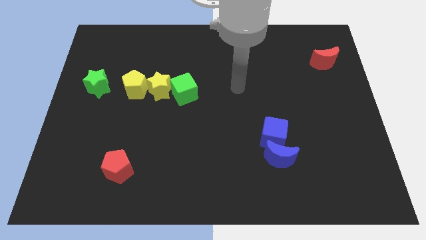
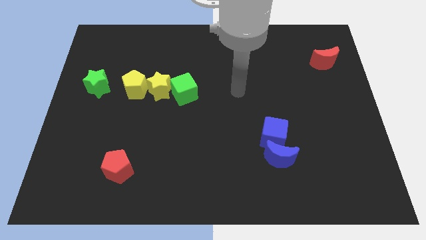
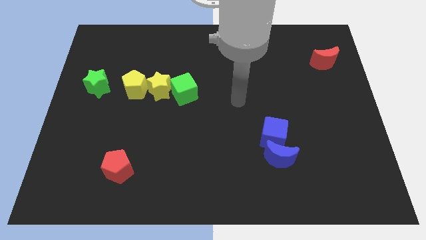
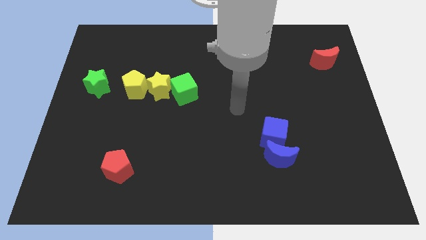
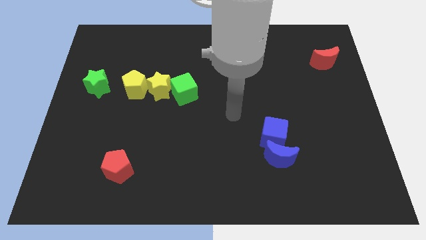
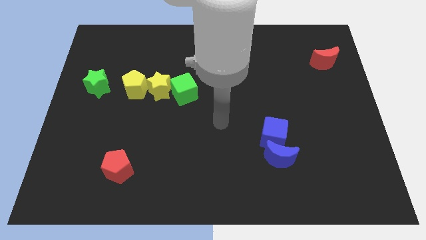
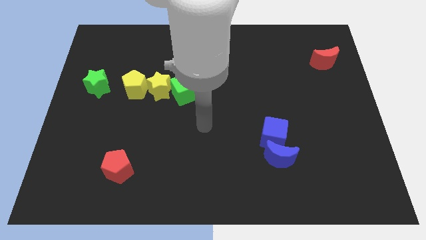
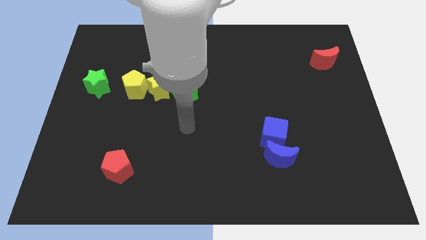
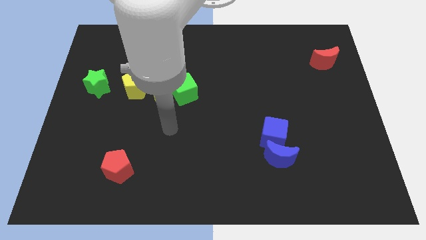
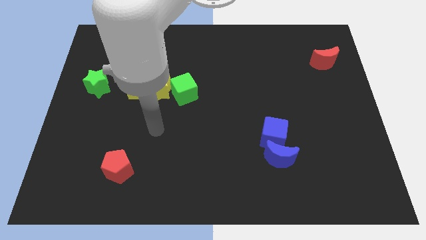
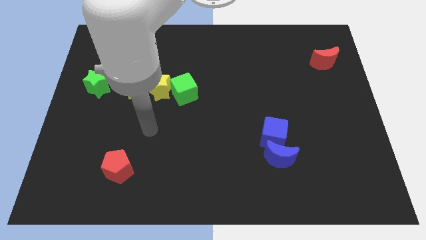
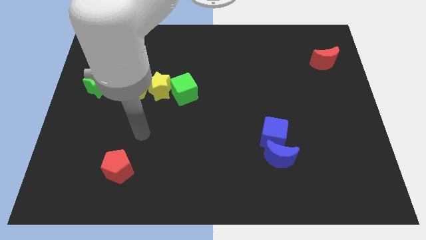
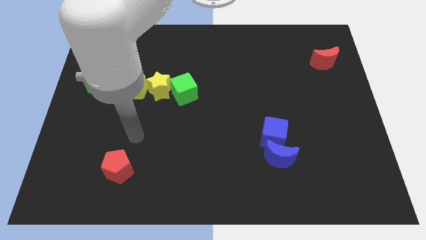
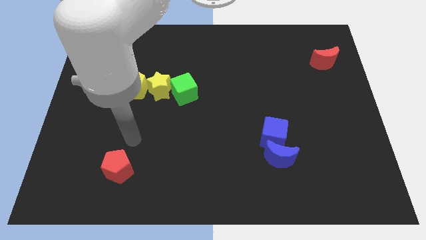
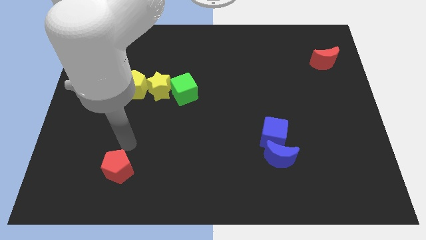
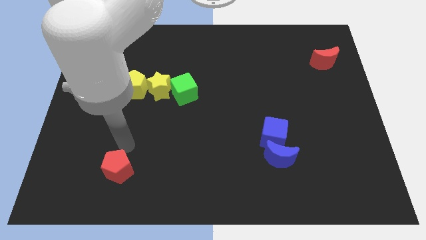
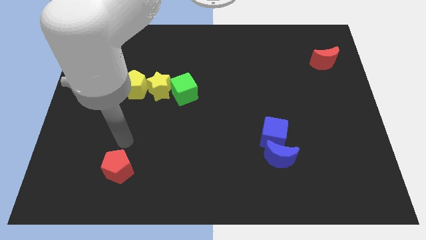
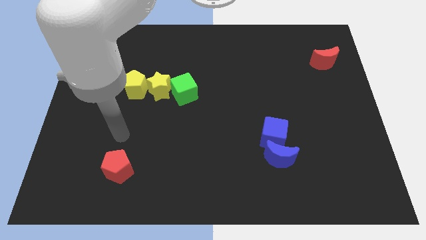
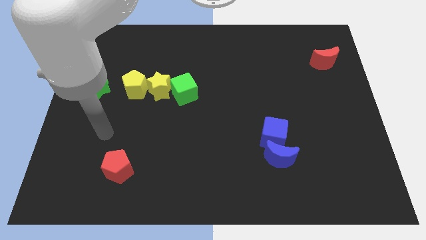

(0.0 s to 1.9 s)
move your arm towards the left center of the board

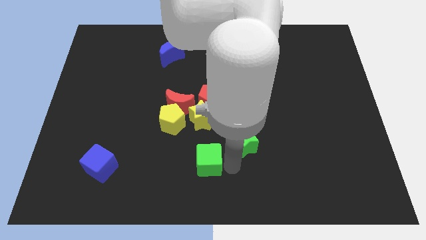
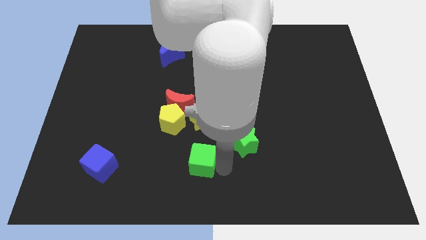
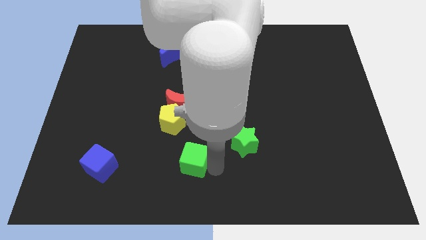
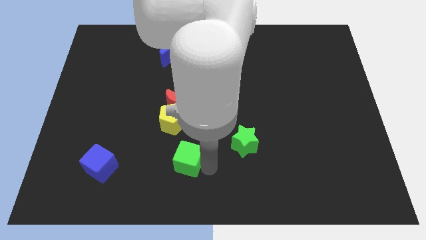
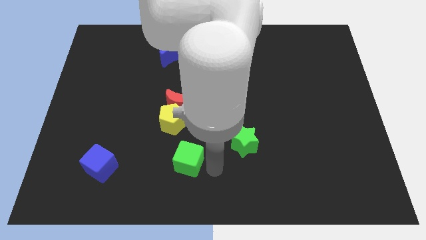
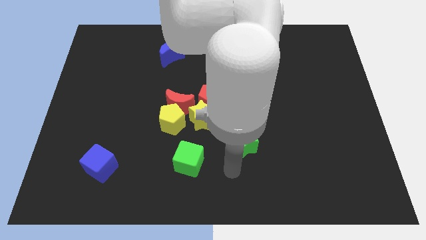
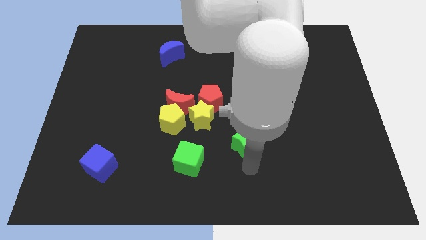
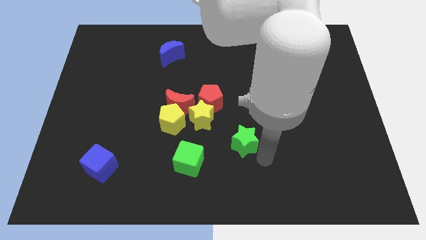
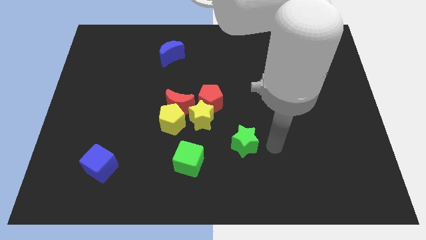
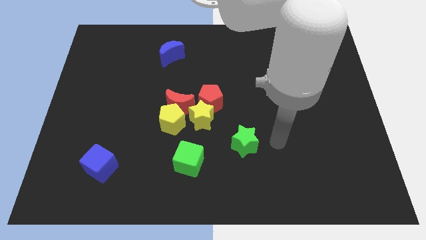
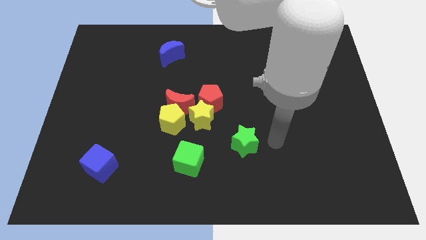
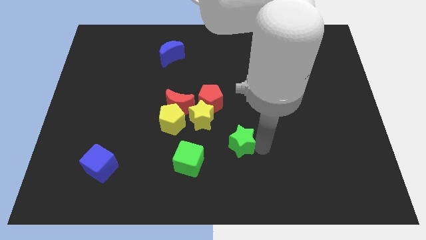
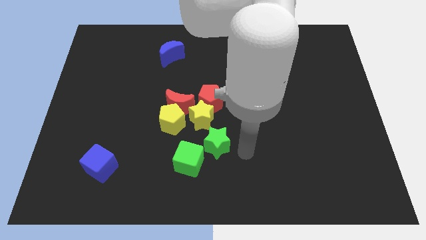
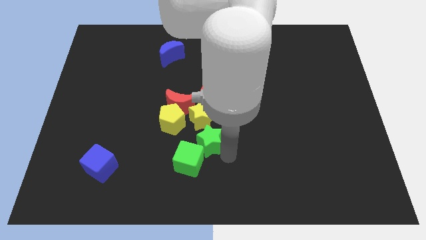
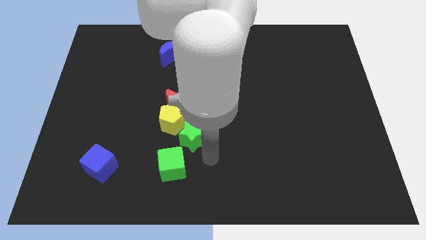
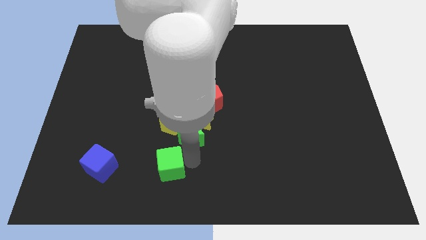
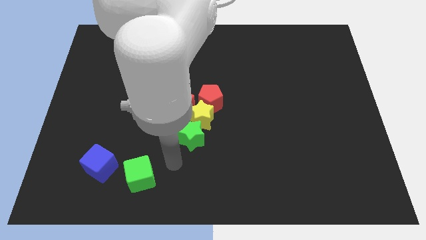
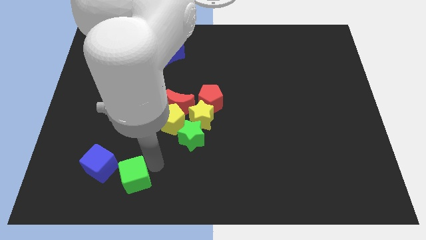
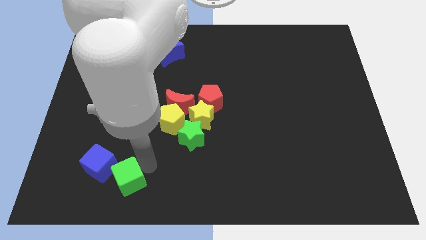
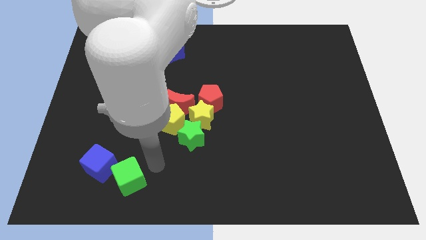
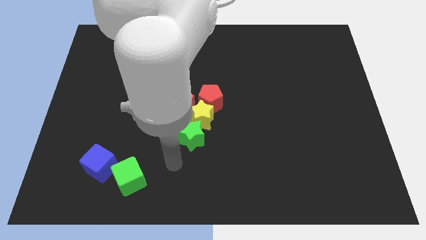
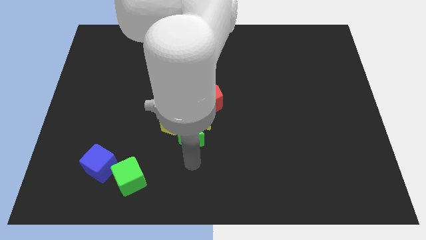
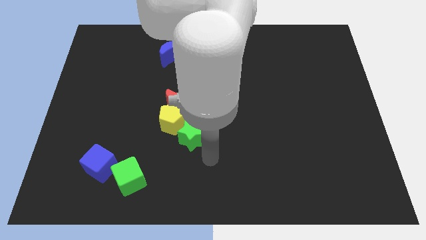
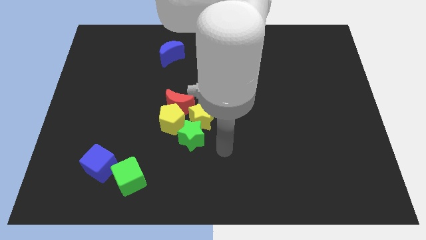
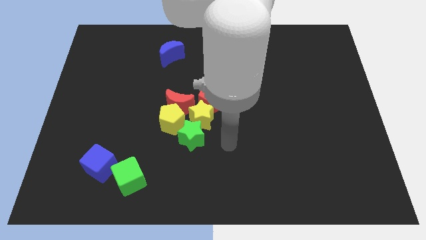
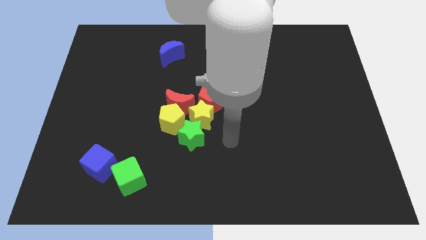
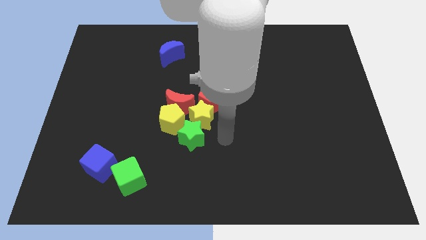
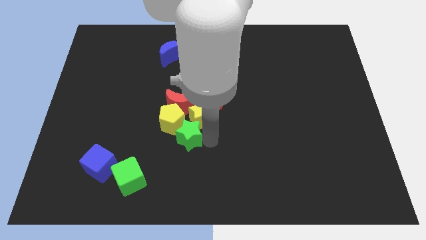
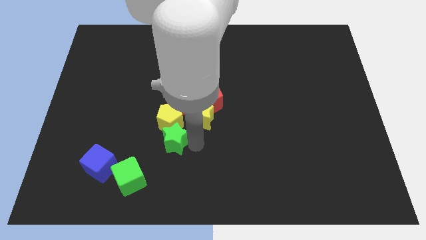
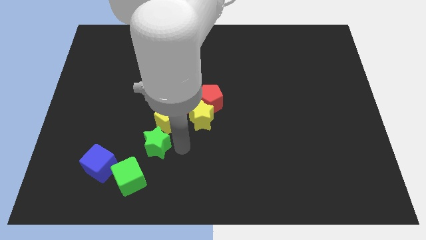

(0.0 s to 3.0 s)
place the green cube close to the blue cube

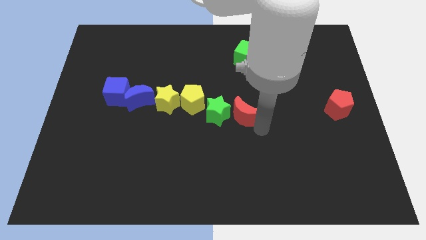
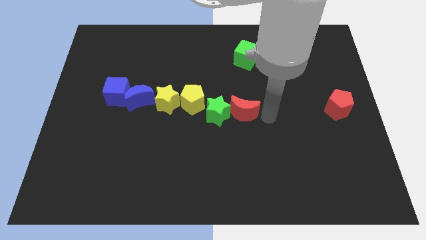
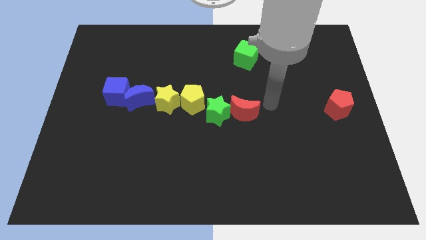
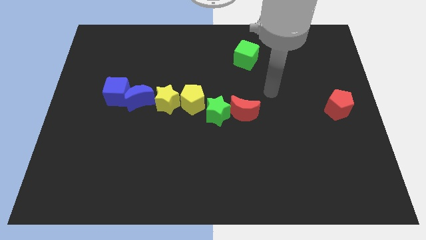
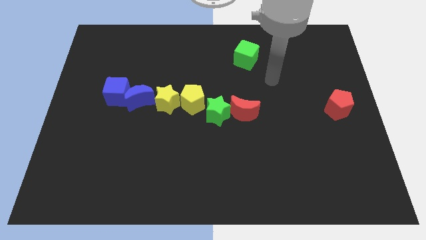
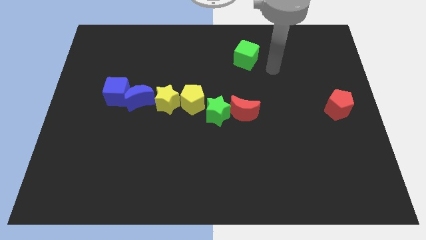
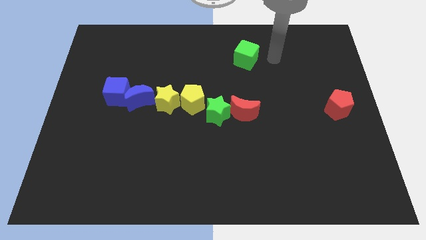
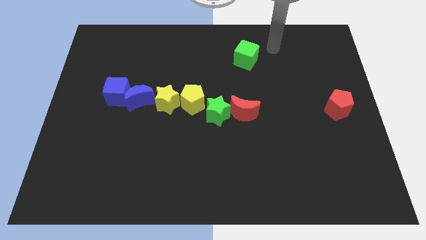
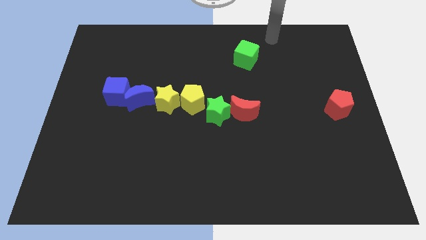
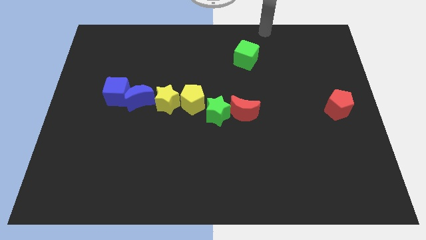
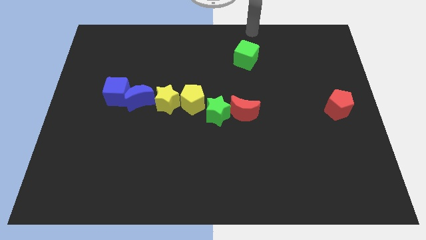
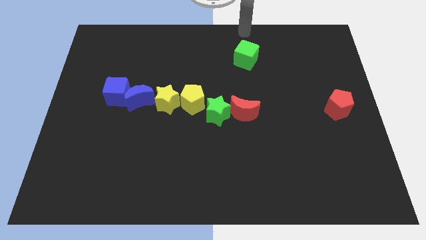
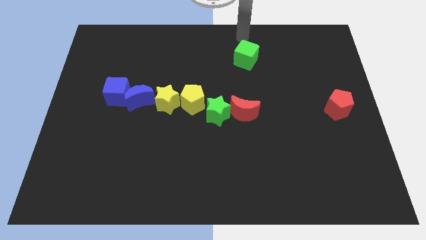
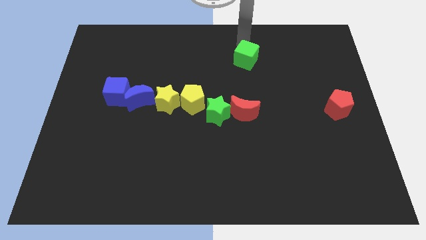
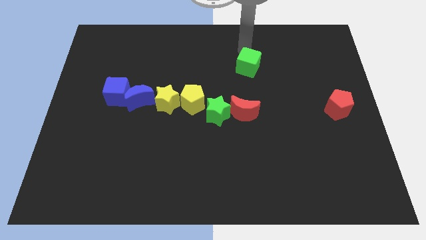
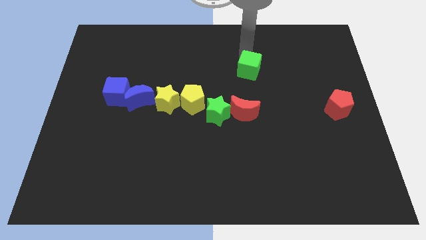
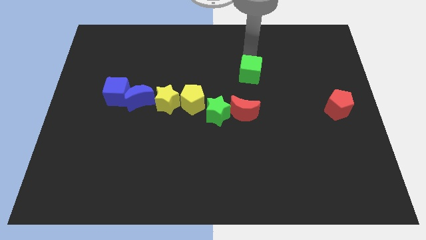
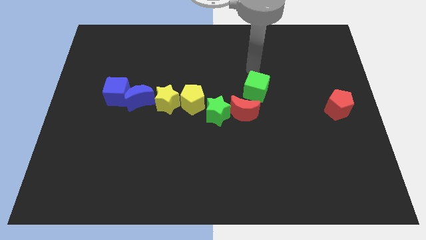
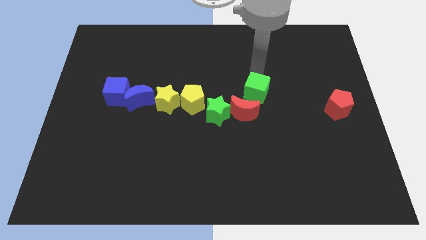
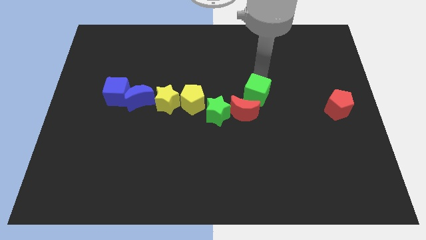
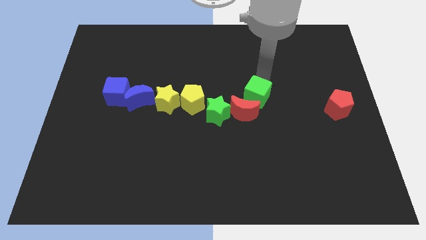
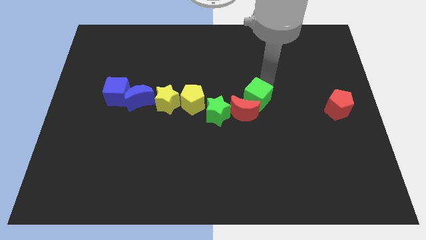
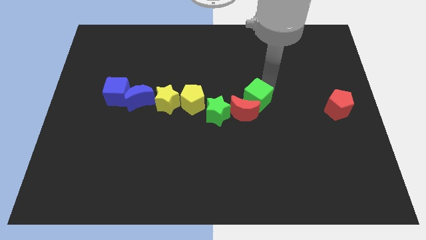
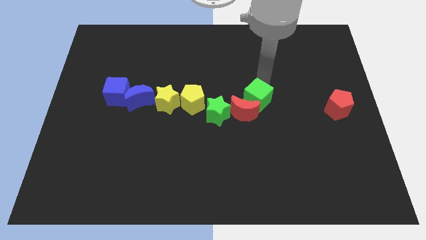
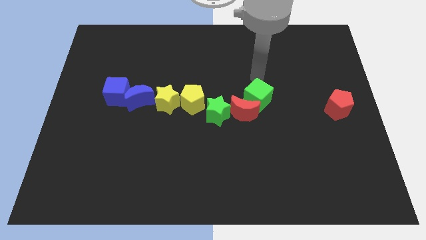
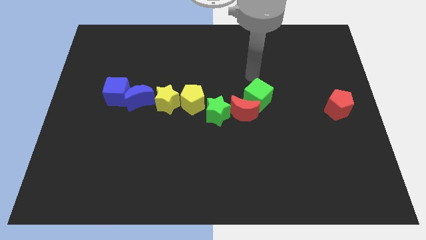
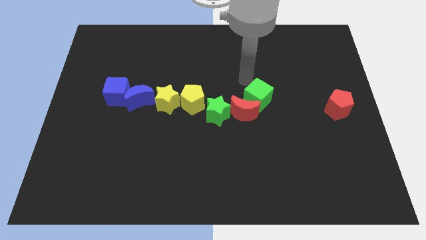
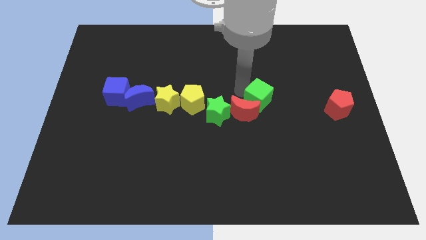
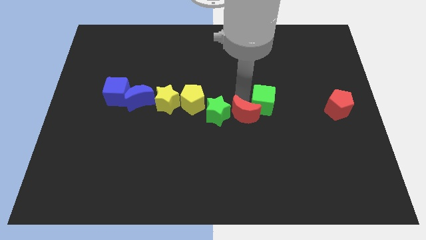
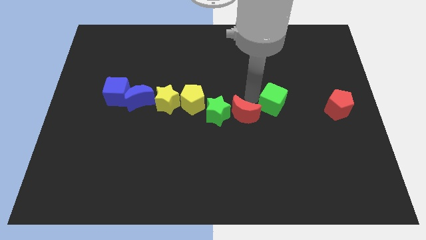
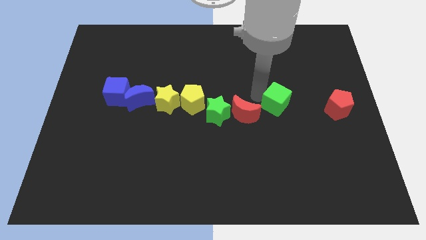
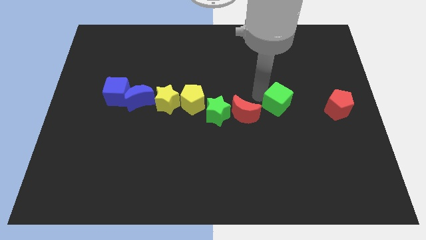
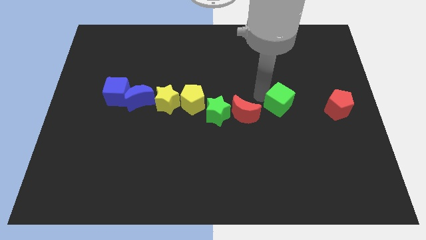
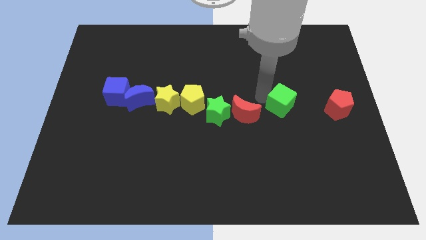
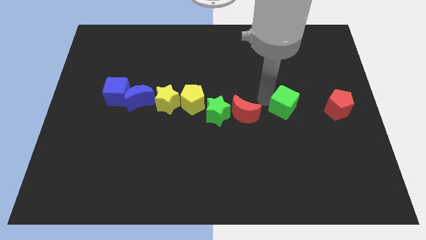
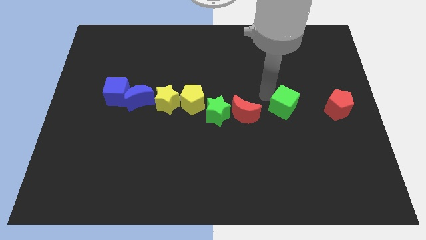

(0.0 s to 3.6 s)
drag the green cube slightly down to form a horizontal line

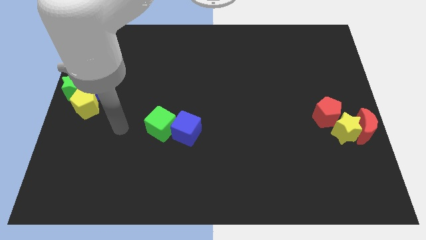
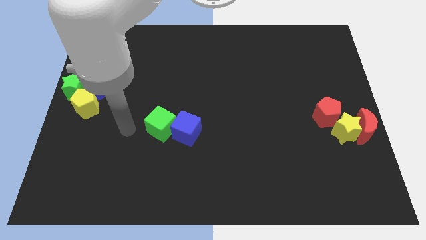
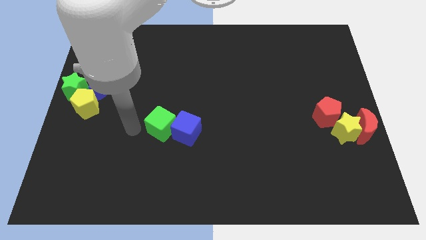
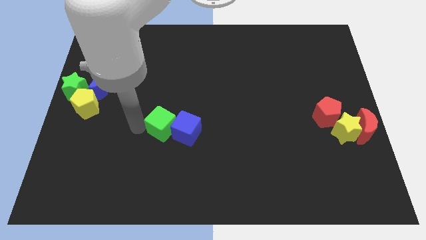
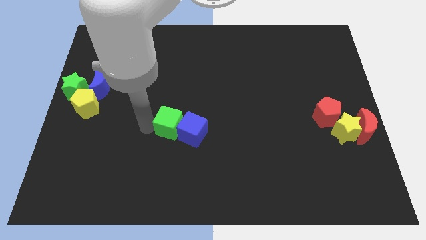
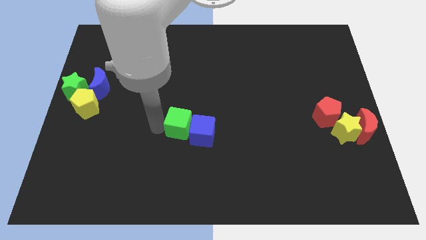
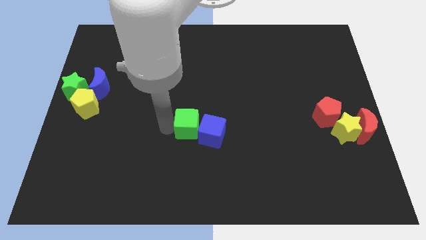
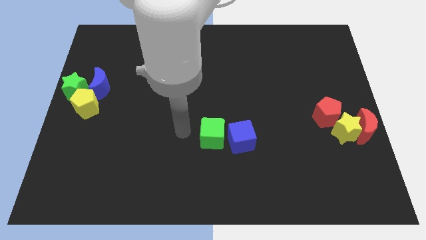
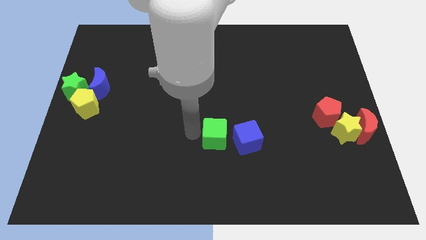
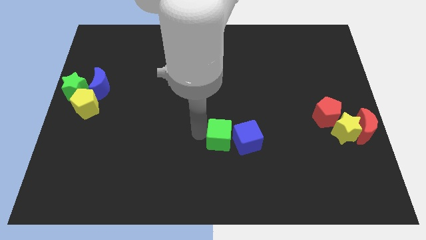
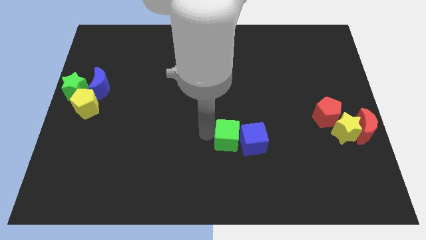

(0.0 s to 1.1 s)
push green cube slightly towards right side
